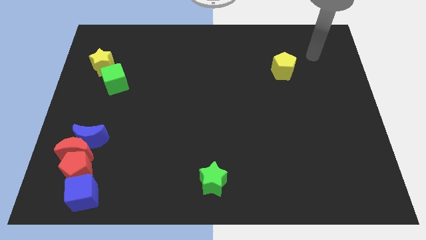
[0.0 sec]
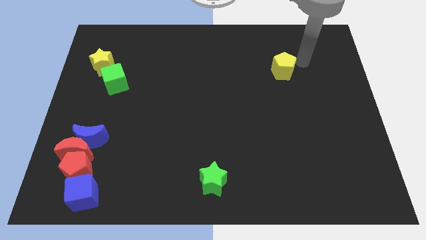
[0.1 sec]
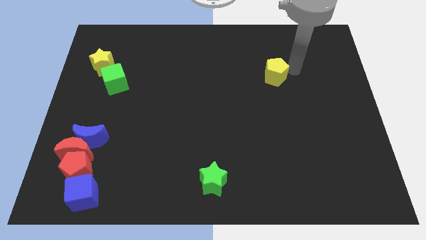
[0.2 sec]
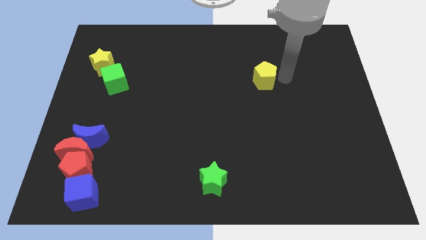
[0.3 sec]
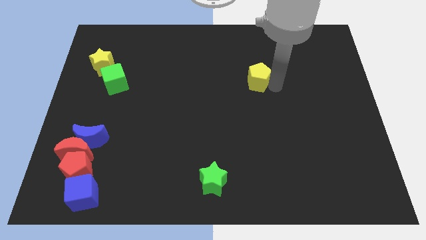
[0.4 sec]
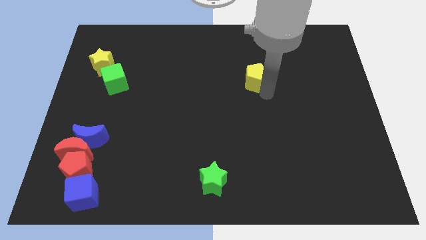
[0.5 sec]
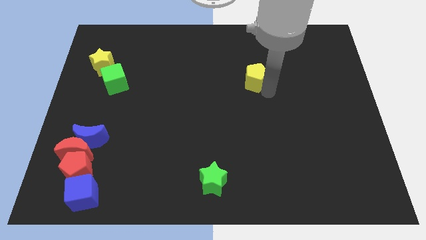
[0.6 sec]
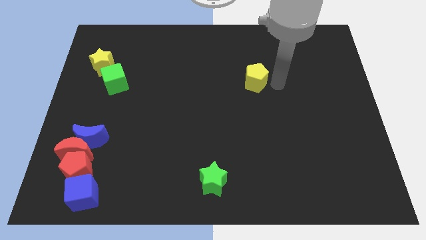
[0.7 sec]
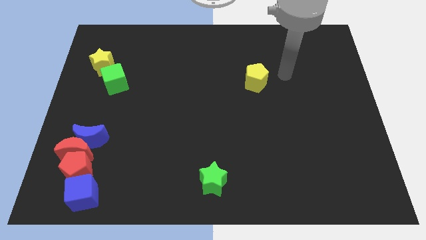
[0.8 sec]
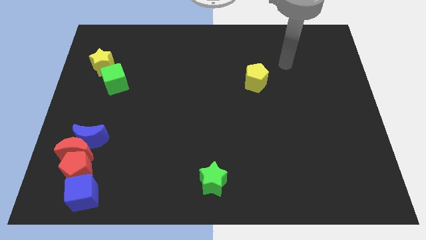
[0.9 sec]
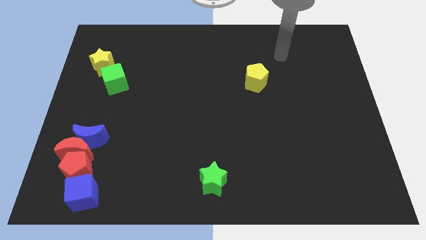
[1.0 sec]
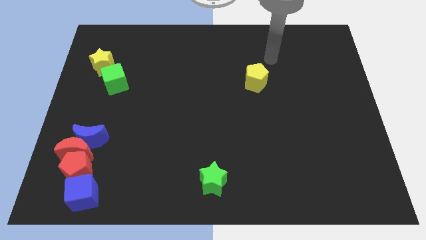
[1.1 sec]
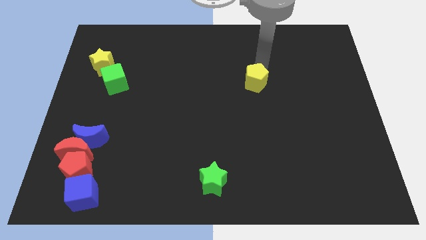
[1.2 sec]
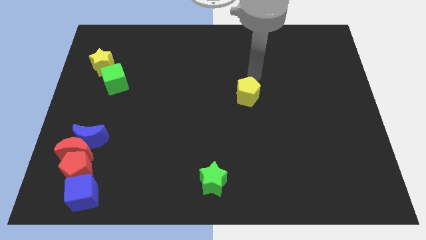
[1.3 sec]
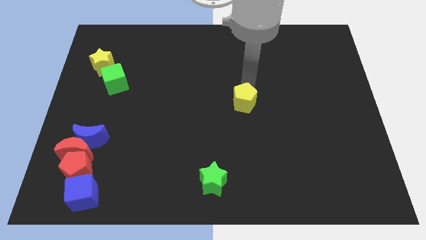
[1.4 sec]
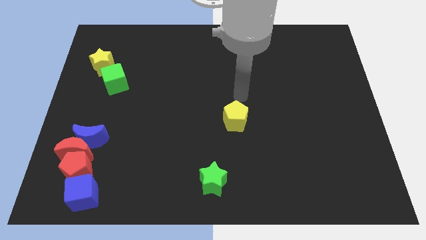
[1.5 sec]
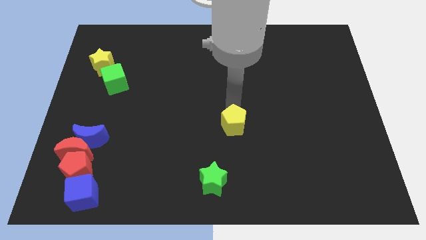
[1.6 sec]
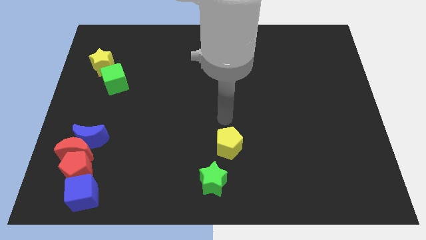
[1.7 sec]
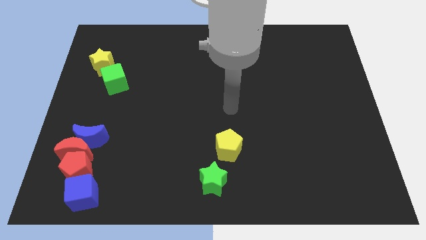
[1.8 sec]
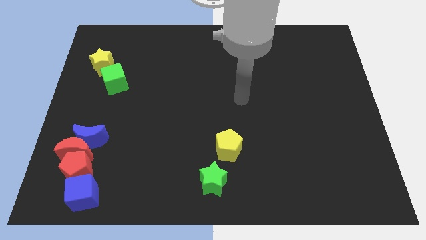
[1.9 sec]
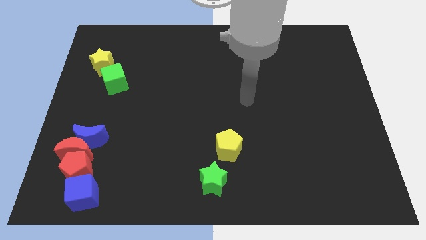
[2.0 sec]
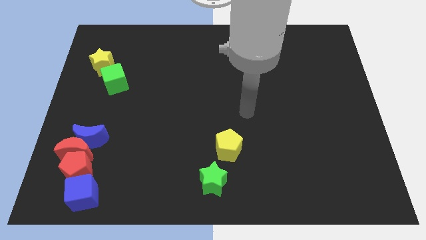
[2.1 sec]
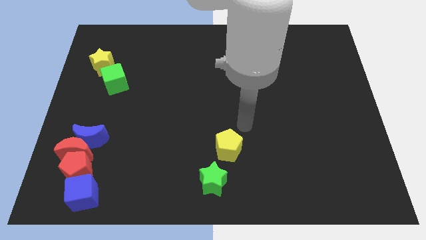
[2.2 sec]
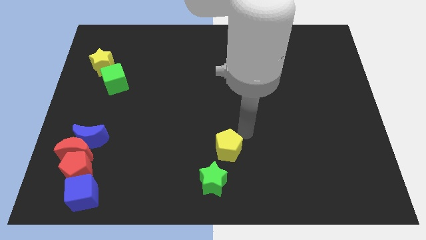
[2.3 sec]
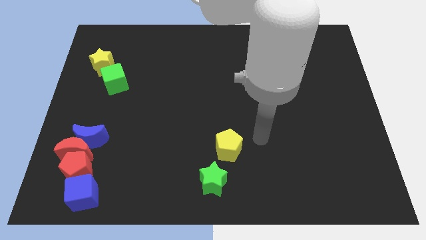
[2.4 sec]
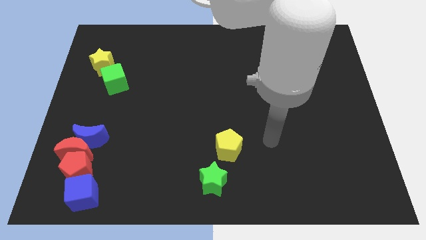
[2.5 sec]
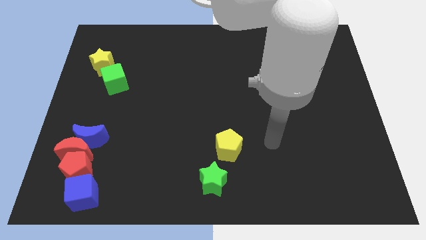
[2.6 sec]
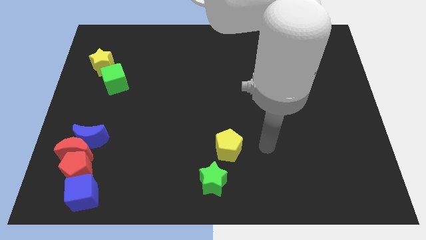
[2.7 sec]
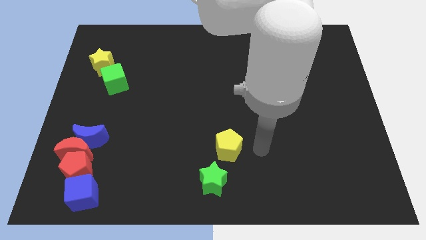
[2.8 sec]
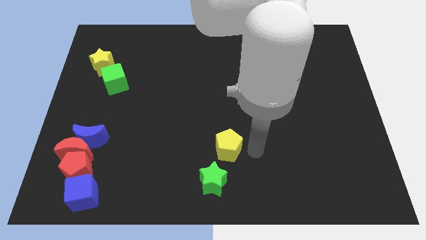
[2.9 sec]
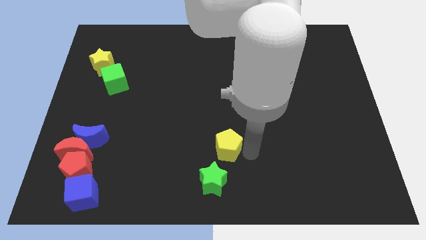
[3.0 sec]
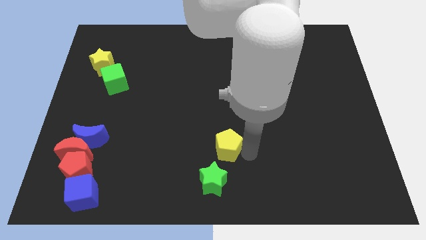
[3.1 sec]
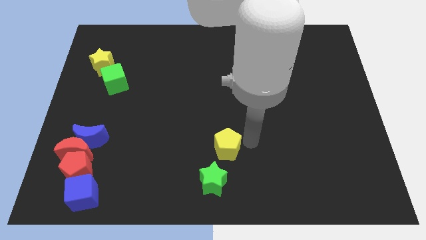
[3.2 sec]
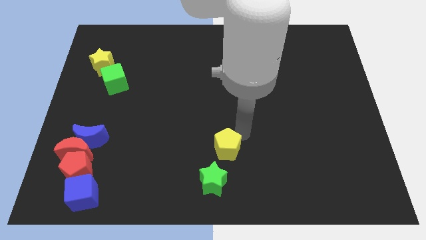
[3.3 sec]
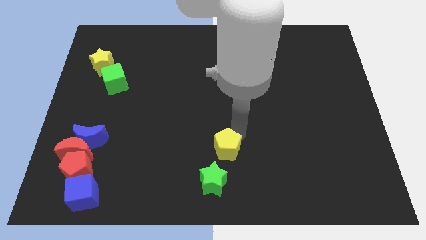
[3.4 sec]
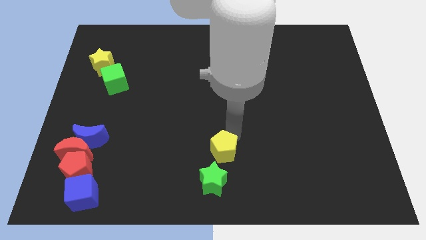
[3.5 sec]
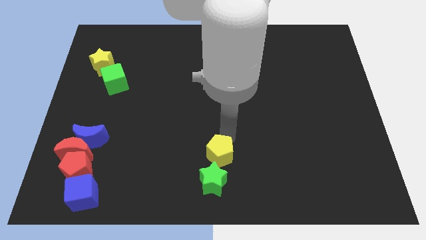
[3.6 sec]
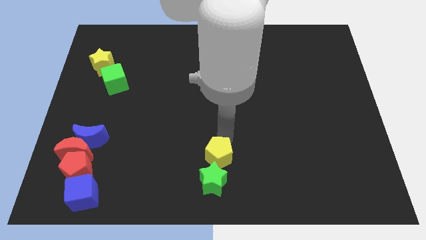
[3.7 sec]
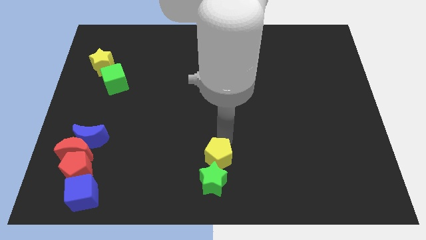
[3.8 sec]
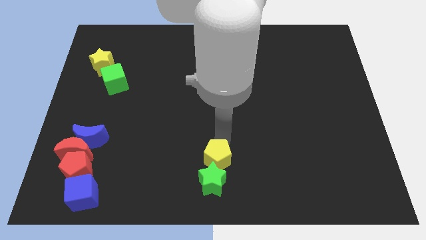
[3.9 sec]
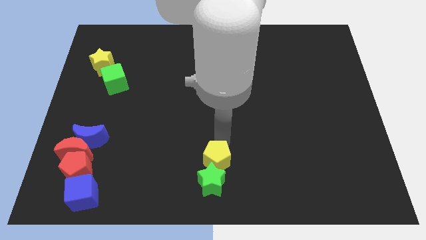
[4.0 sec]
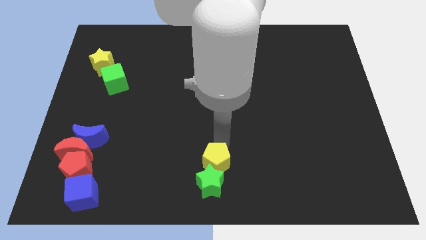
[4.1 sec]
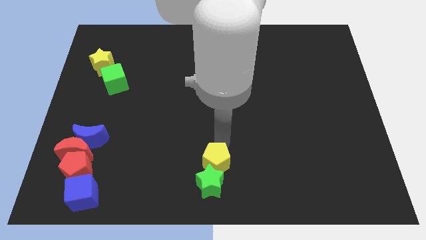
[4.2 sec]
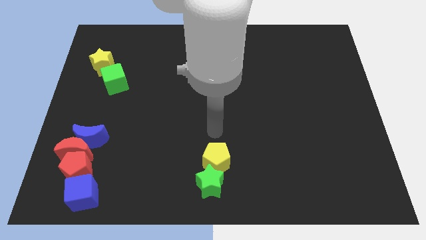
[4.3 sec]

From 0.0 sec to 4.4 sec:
place the yellow pentagon up to the green star

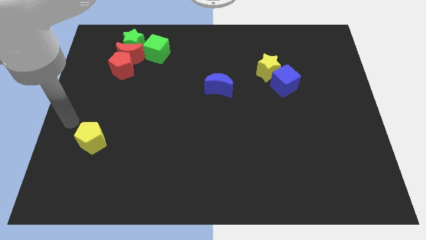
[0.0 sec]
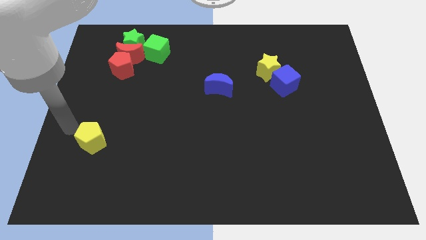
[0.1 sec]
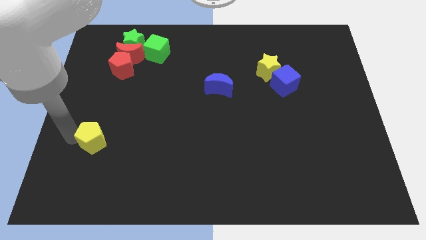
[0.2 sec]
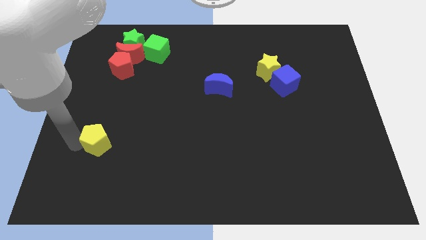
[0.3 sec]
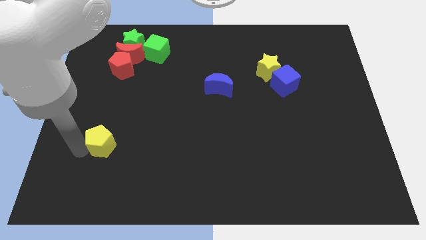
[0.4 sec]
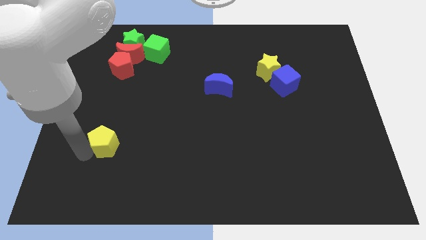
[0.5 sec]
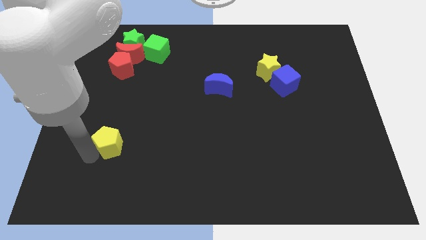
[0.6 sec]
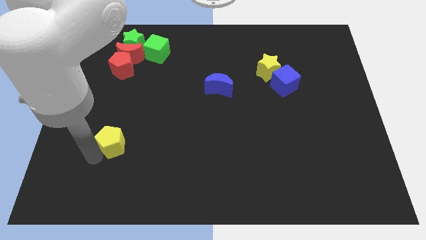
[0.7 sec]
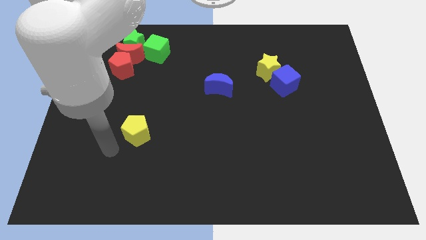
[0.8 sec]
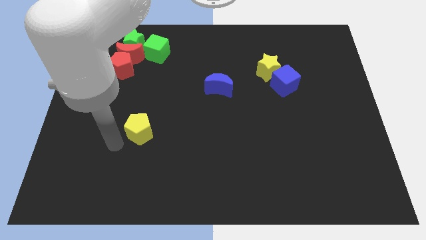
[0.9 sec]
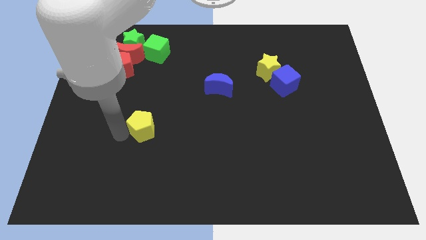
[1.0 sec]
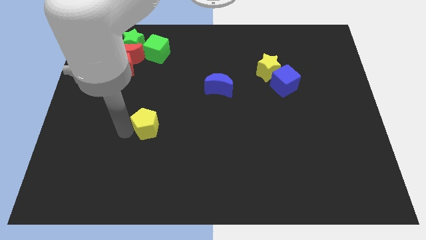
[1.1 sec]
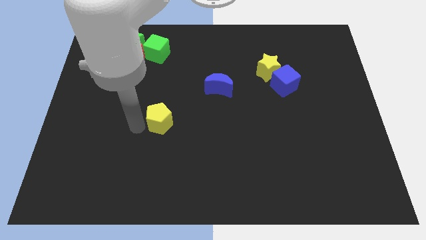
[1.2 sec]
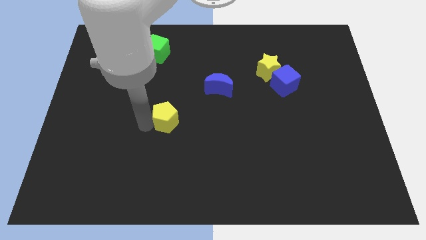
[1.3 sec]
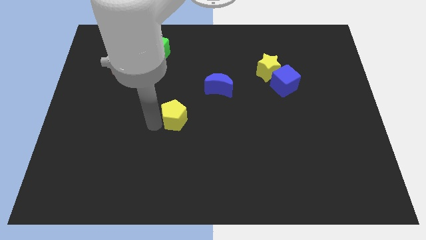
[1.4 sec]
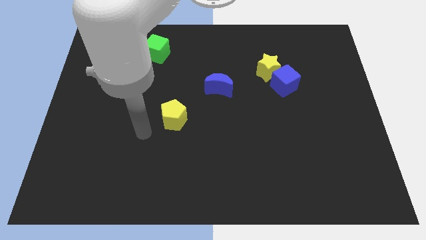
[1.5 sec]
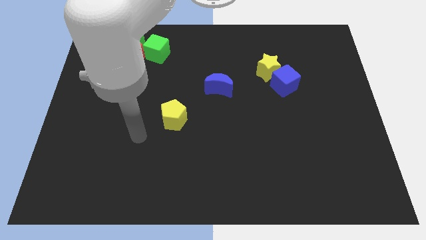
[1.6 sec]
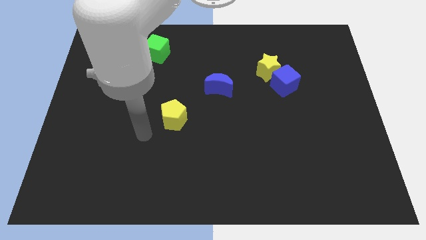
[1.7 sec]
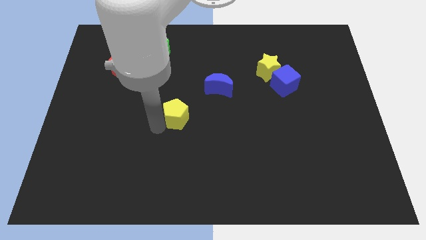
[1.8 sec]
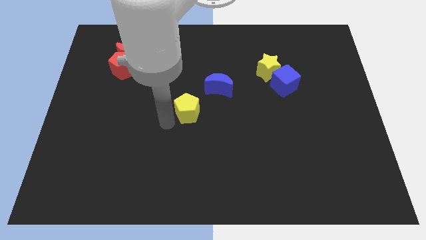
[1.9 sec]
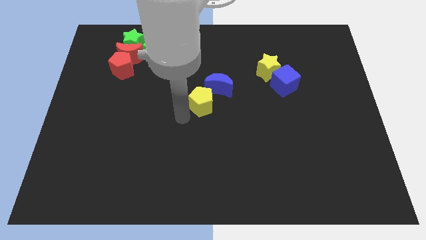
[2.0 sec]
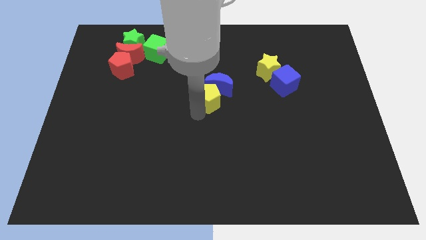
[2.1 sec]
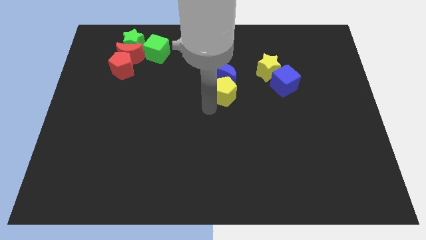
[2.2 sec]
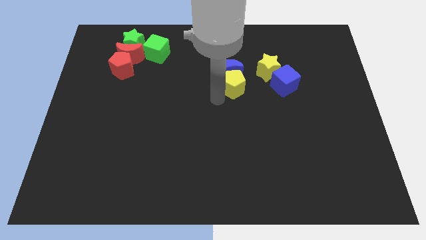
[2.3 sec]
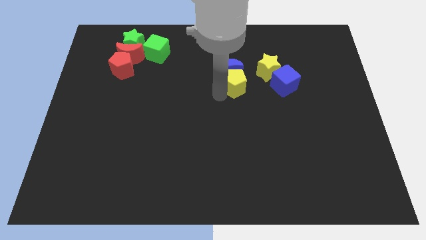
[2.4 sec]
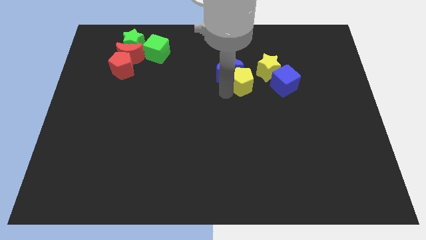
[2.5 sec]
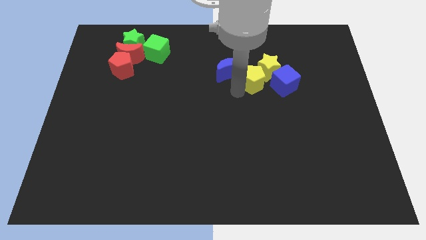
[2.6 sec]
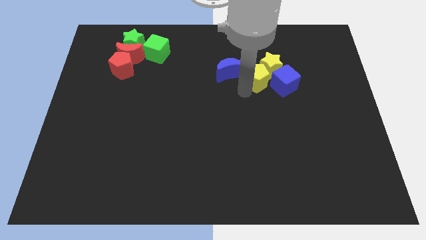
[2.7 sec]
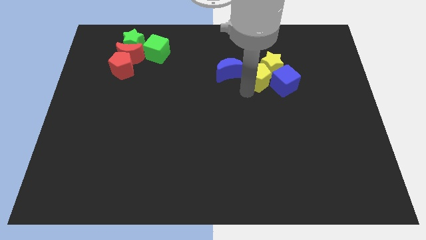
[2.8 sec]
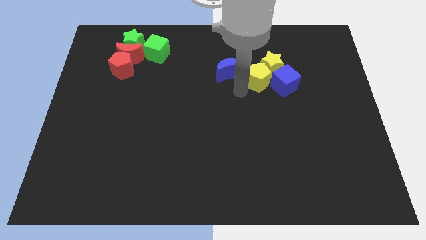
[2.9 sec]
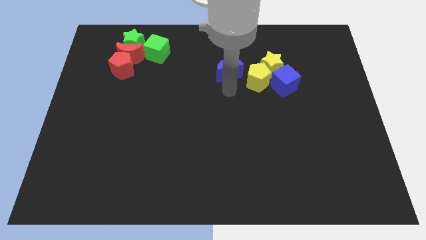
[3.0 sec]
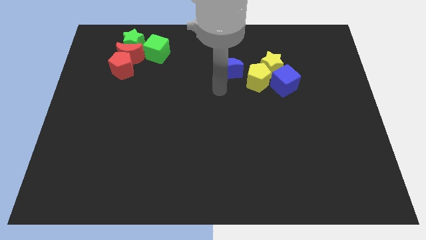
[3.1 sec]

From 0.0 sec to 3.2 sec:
push the yellow pentagon into the green star

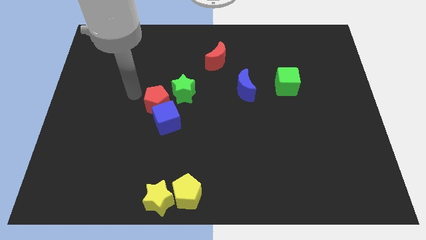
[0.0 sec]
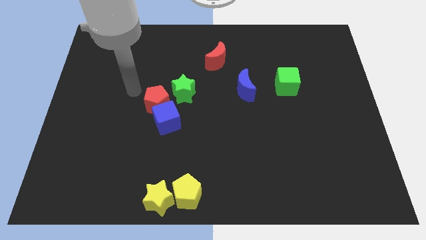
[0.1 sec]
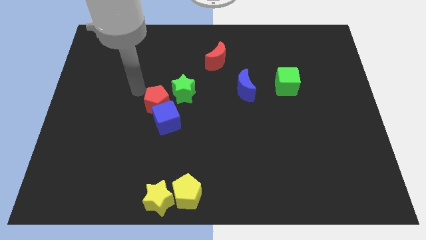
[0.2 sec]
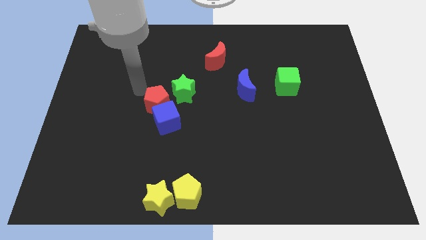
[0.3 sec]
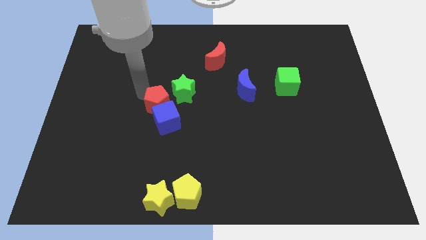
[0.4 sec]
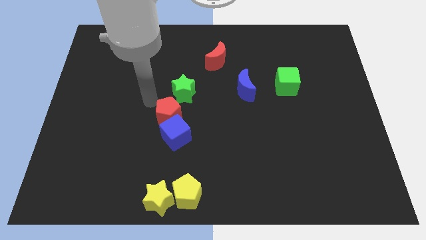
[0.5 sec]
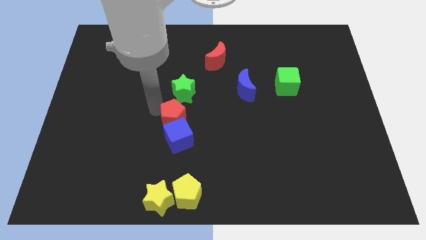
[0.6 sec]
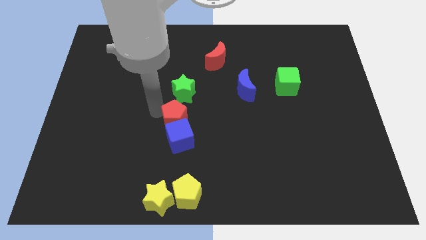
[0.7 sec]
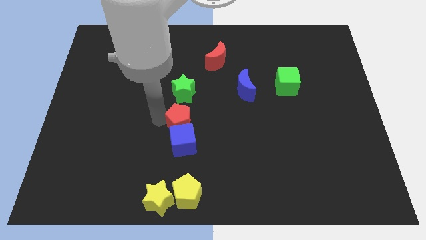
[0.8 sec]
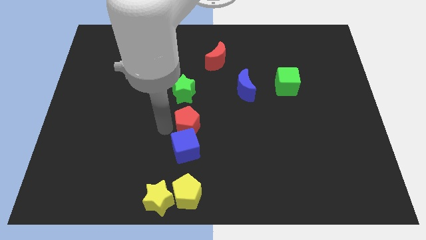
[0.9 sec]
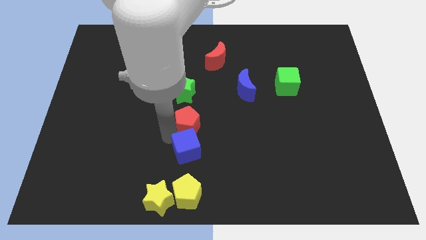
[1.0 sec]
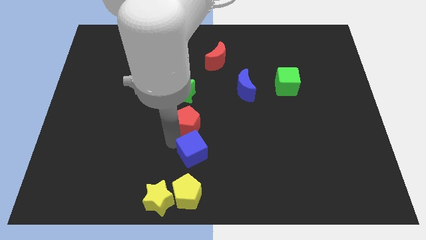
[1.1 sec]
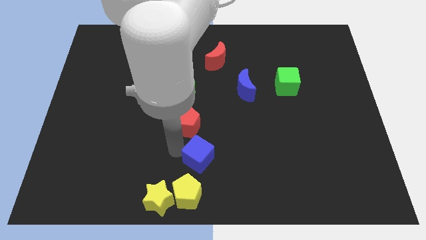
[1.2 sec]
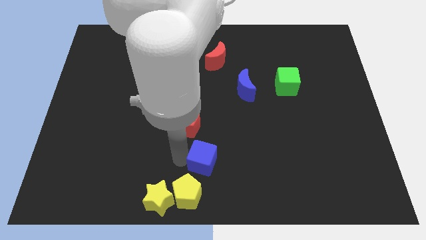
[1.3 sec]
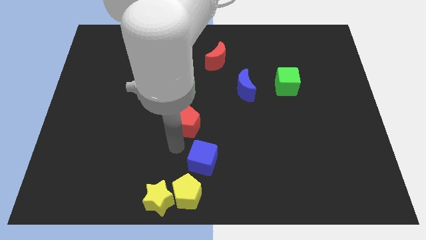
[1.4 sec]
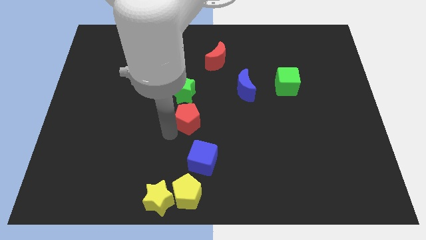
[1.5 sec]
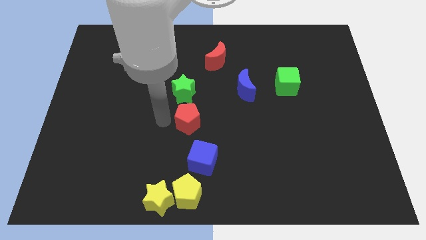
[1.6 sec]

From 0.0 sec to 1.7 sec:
separate the blue cube from the red pentagon
